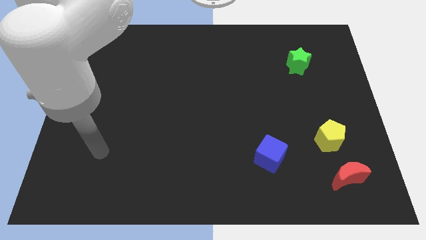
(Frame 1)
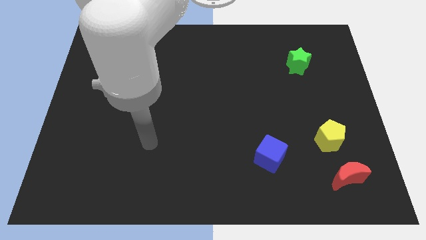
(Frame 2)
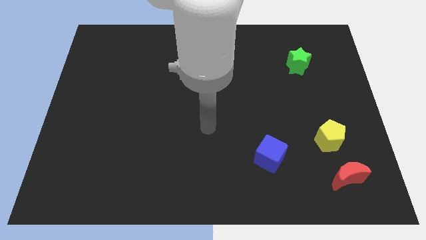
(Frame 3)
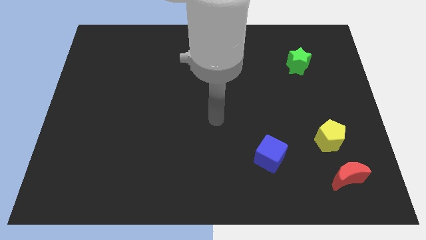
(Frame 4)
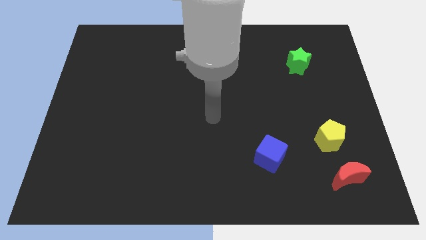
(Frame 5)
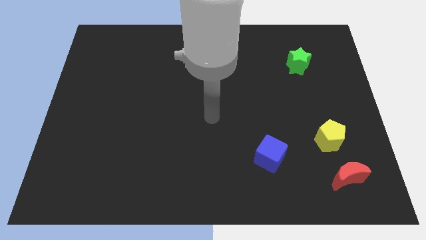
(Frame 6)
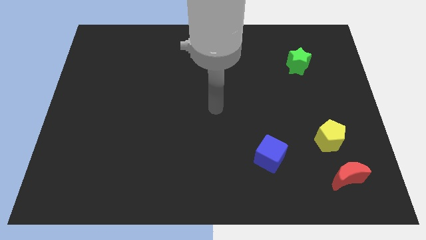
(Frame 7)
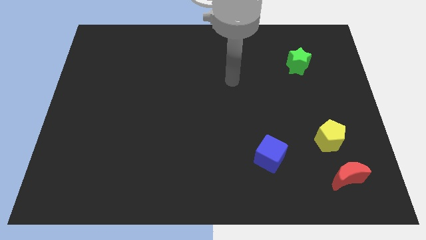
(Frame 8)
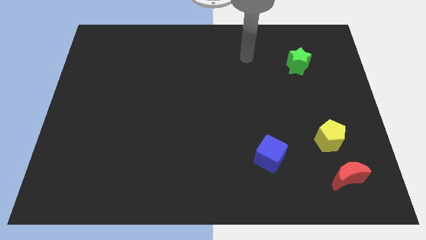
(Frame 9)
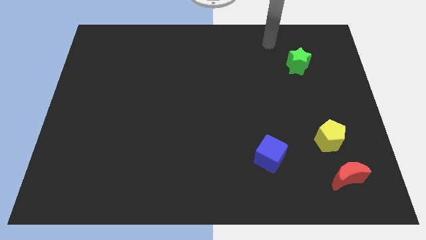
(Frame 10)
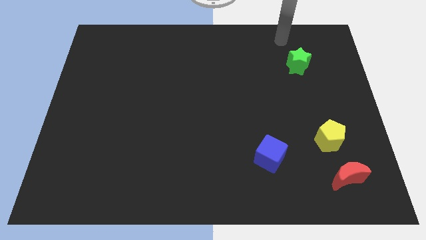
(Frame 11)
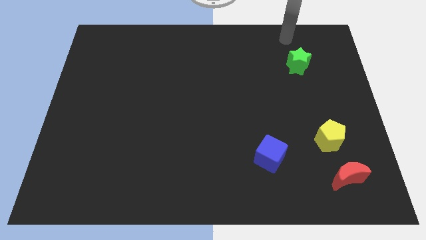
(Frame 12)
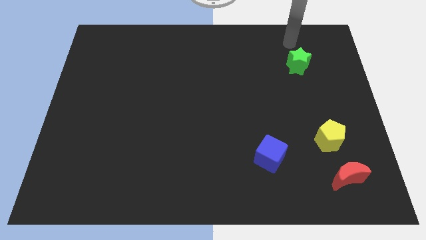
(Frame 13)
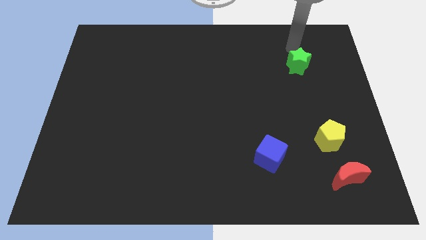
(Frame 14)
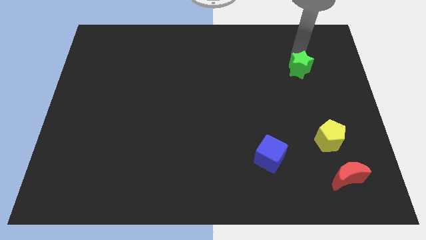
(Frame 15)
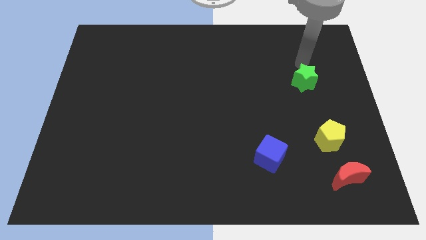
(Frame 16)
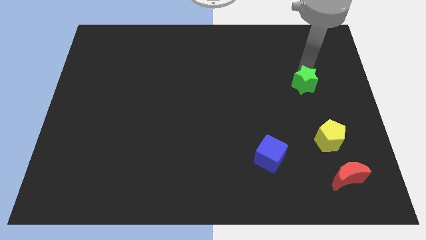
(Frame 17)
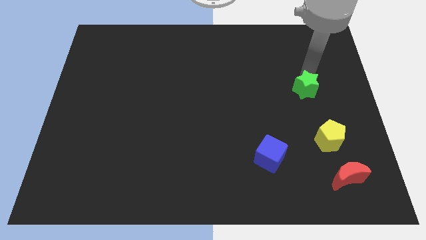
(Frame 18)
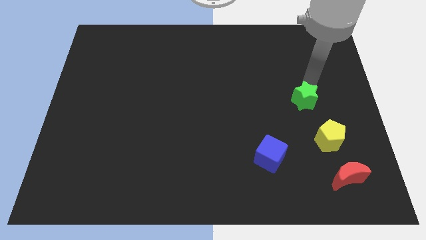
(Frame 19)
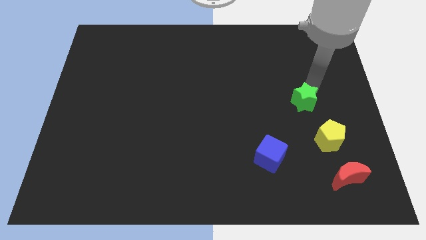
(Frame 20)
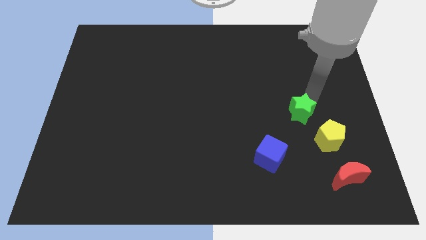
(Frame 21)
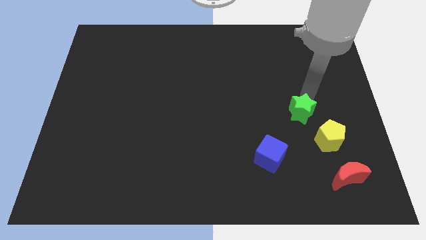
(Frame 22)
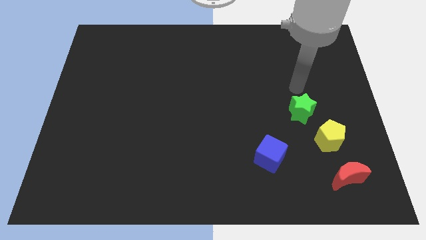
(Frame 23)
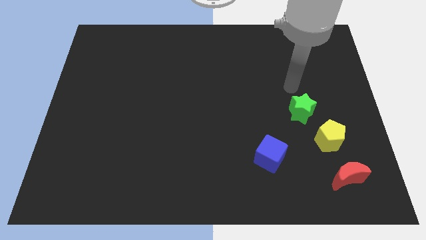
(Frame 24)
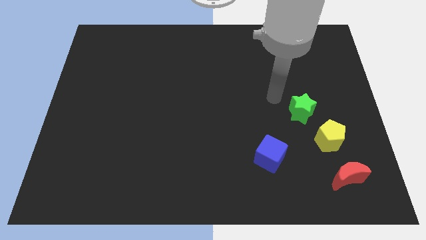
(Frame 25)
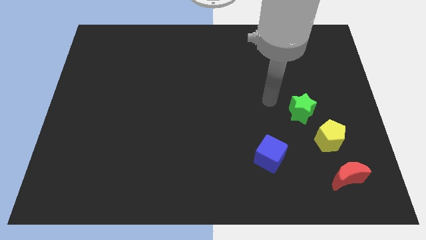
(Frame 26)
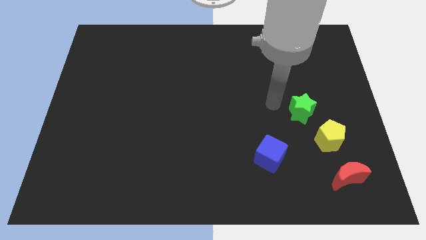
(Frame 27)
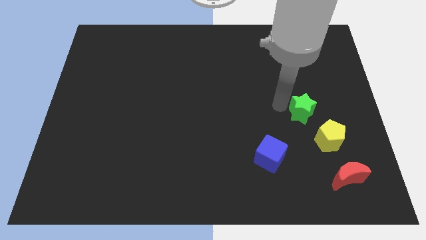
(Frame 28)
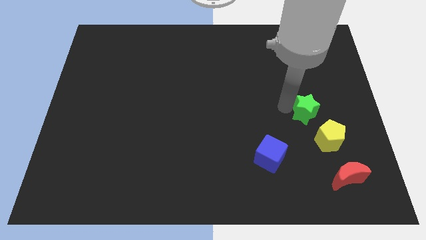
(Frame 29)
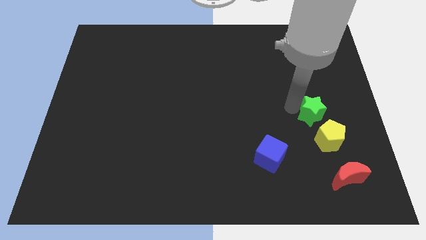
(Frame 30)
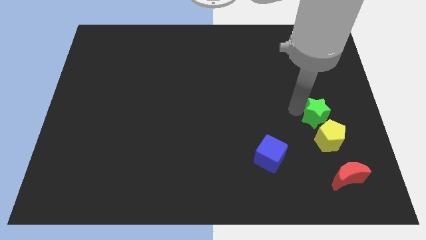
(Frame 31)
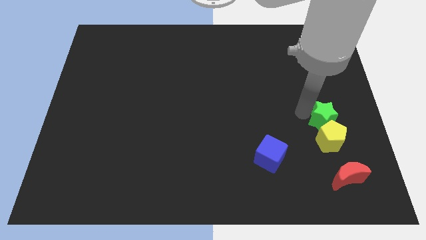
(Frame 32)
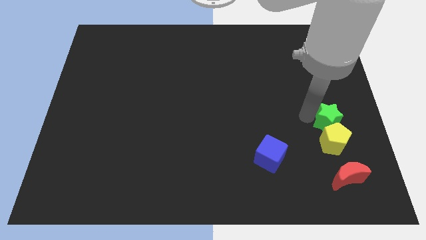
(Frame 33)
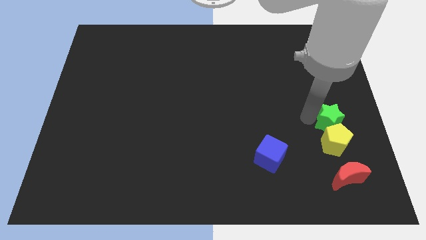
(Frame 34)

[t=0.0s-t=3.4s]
slide the green star next to the yellow block

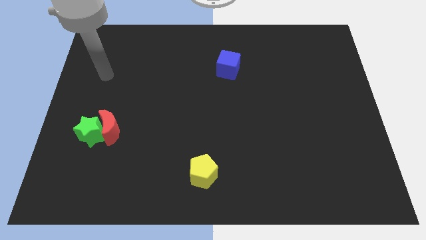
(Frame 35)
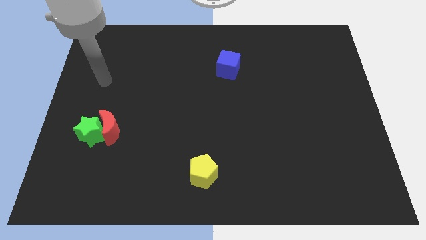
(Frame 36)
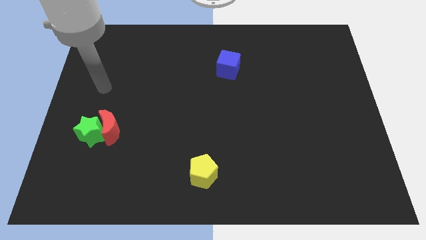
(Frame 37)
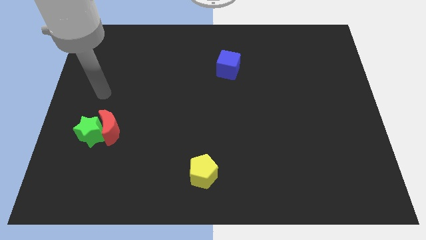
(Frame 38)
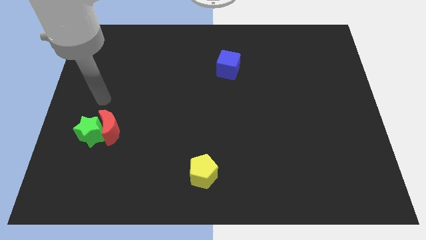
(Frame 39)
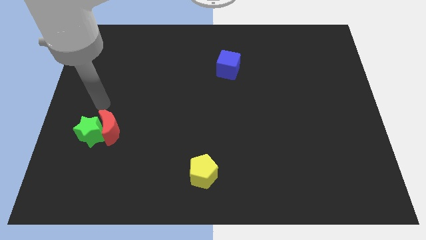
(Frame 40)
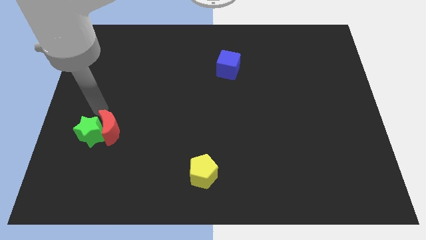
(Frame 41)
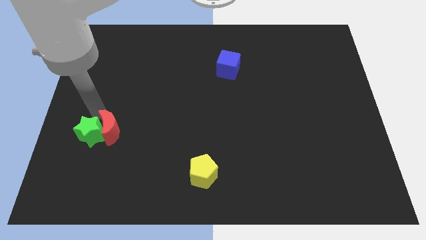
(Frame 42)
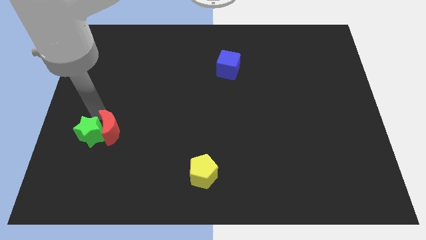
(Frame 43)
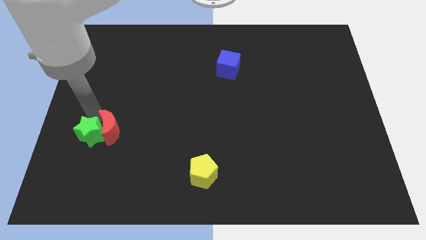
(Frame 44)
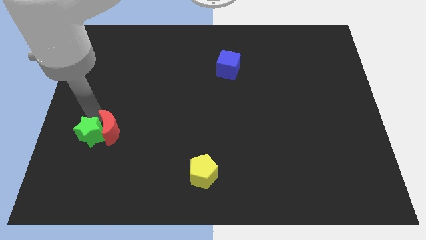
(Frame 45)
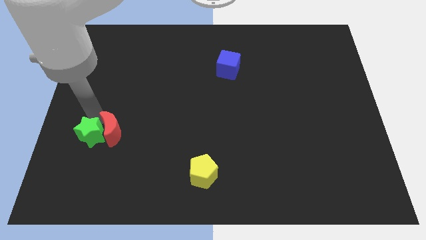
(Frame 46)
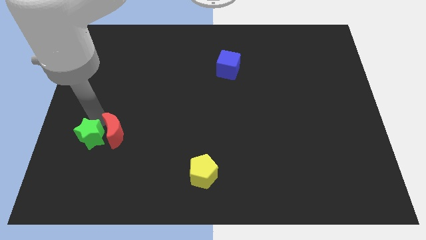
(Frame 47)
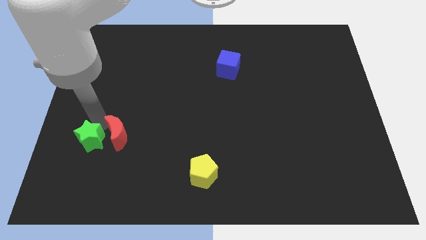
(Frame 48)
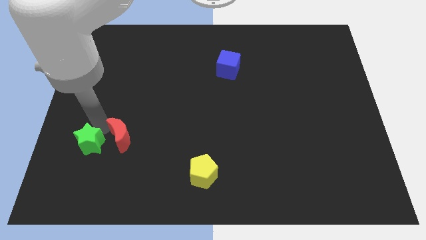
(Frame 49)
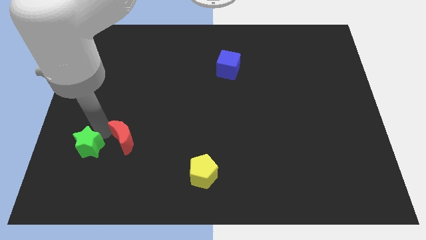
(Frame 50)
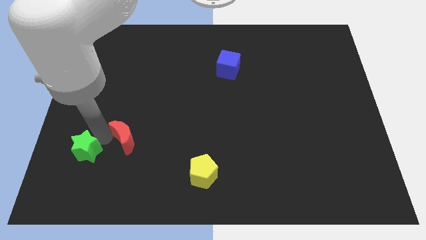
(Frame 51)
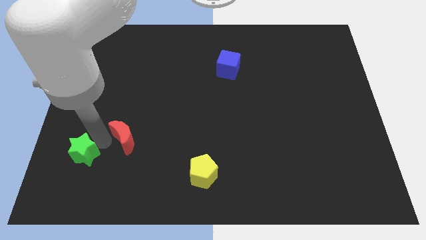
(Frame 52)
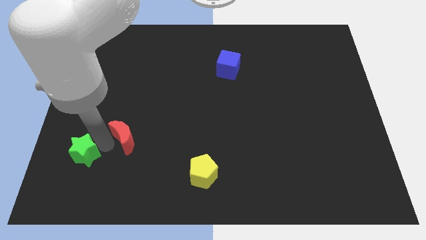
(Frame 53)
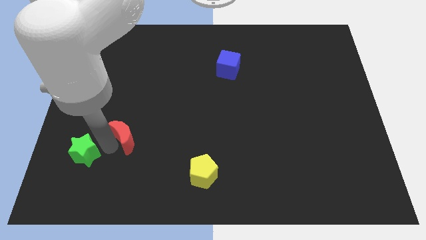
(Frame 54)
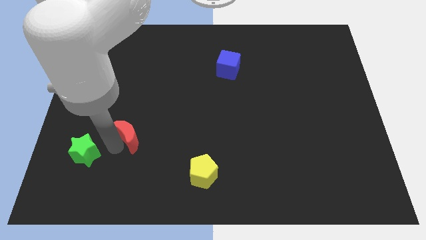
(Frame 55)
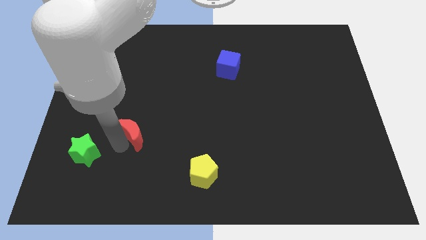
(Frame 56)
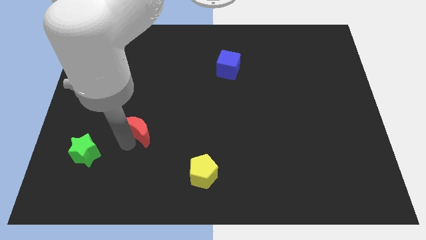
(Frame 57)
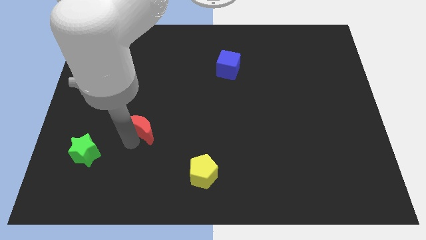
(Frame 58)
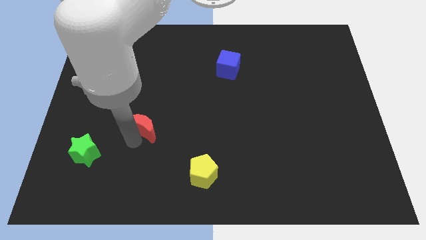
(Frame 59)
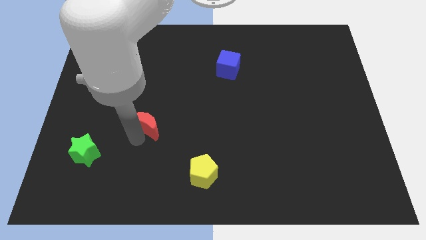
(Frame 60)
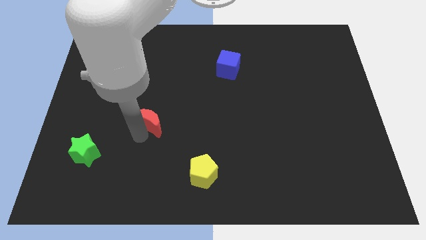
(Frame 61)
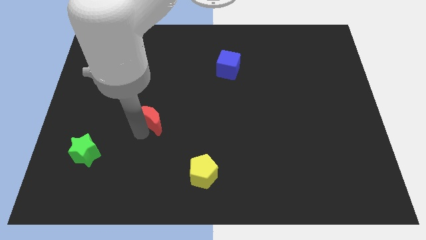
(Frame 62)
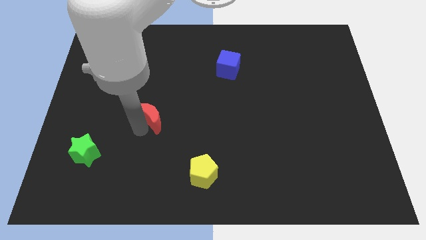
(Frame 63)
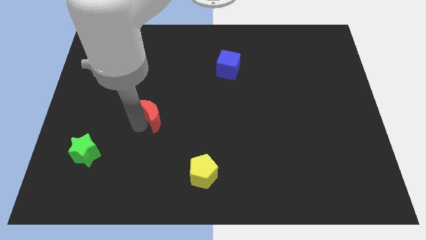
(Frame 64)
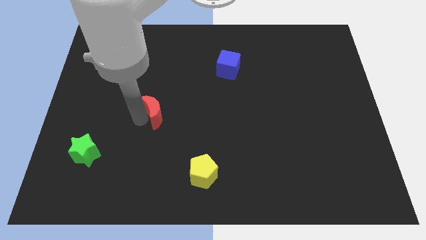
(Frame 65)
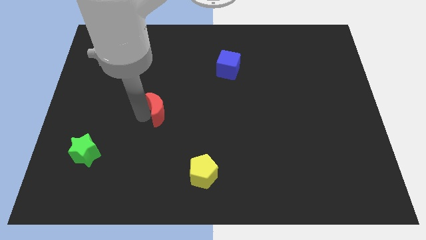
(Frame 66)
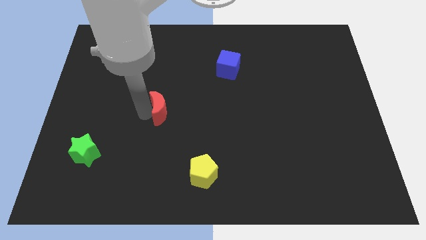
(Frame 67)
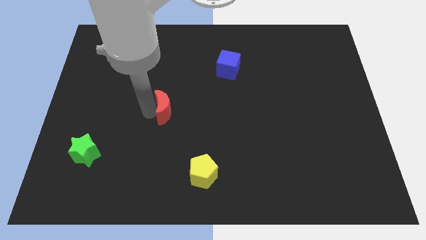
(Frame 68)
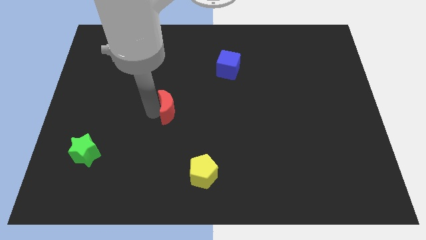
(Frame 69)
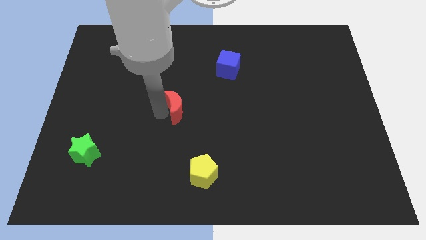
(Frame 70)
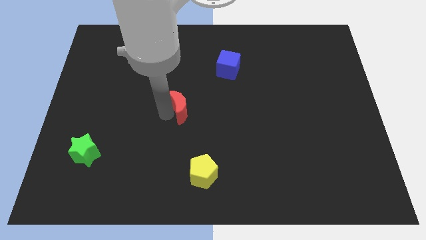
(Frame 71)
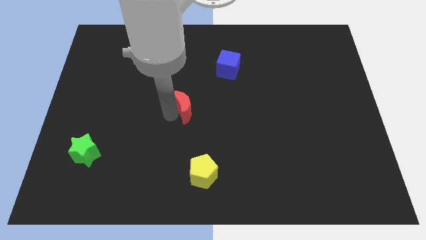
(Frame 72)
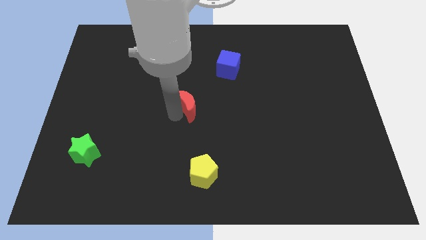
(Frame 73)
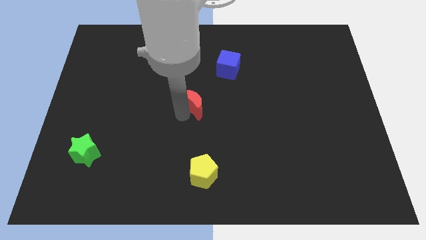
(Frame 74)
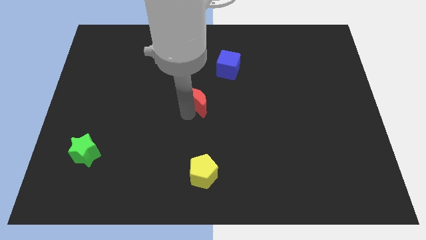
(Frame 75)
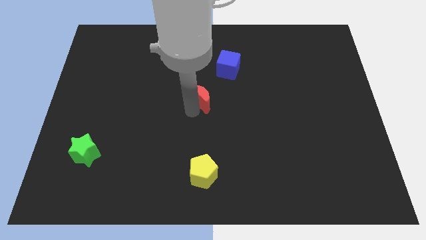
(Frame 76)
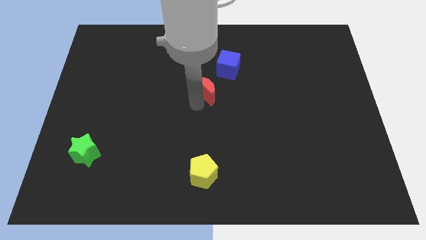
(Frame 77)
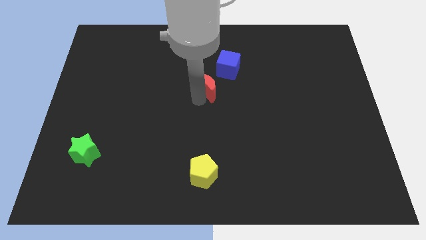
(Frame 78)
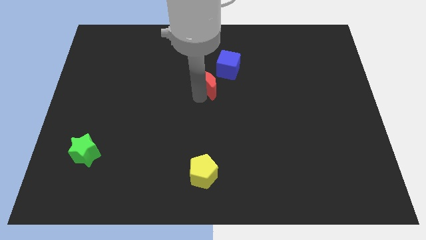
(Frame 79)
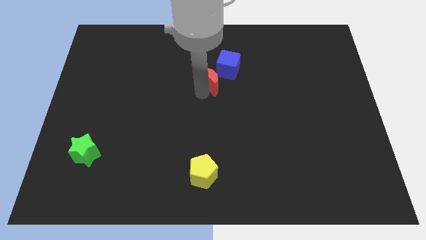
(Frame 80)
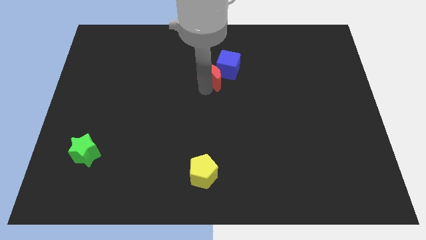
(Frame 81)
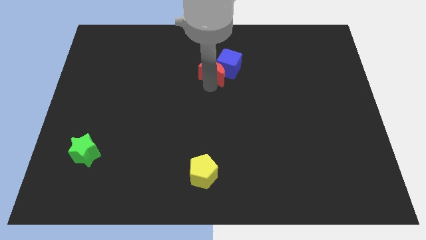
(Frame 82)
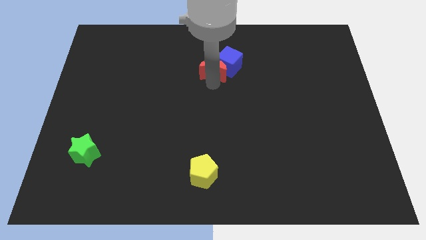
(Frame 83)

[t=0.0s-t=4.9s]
put the red moon to the blue block

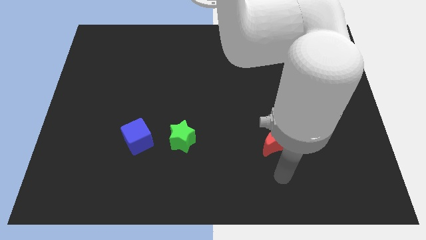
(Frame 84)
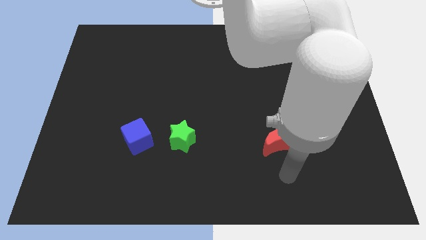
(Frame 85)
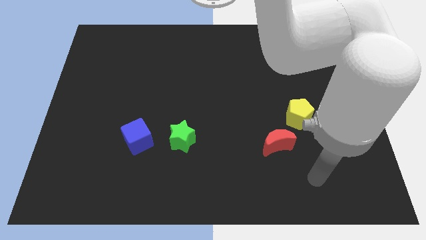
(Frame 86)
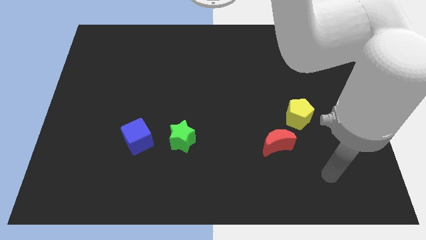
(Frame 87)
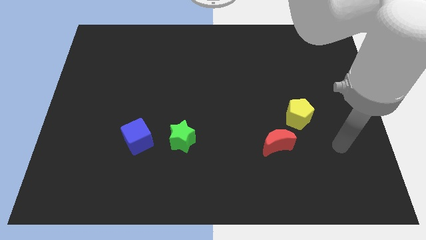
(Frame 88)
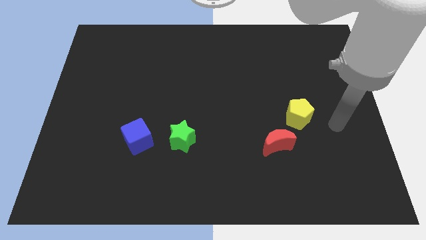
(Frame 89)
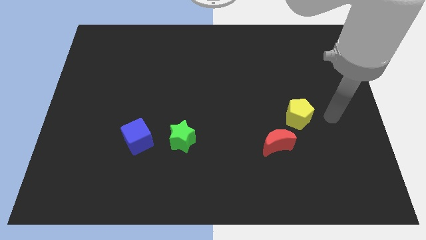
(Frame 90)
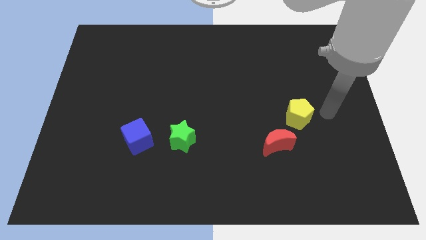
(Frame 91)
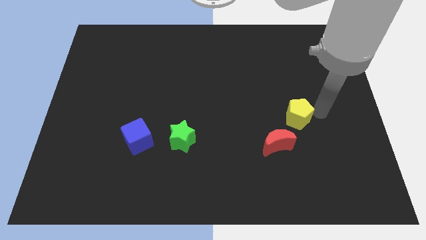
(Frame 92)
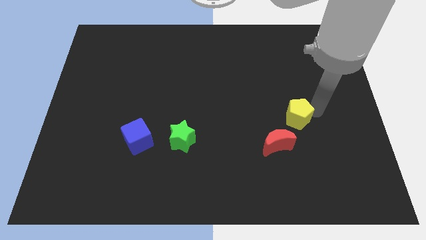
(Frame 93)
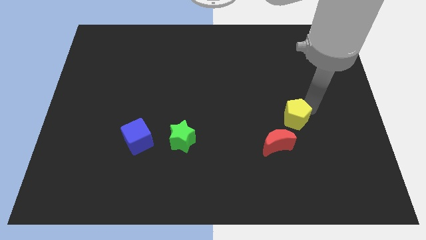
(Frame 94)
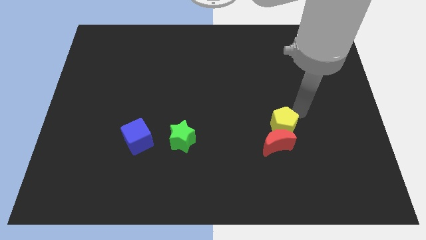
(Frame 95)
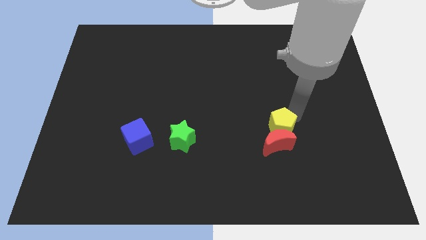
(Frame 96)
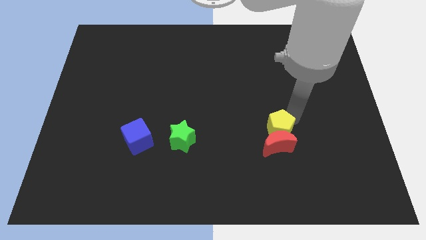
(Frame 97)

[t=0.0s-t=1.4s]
put the pentagon close to the moon
